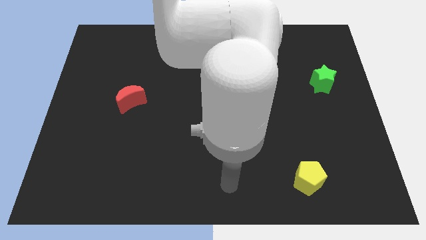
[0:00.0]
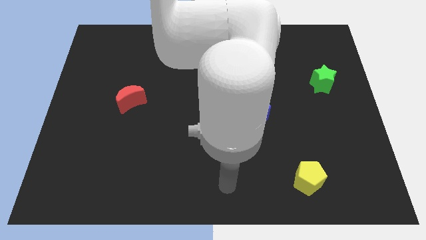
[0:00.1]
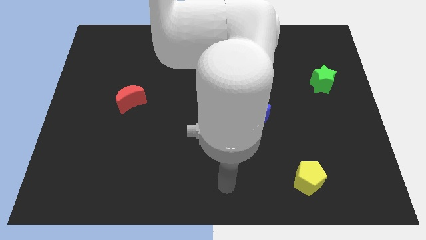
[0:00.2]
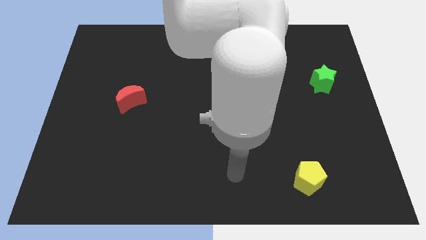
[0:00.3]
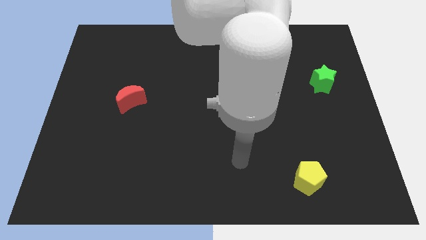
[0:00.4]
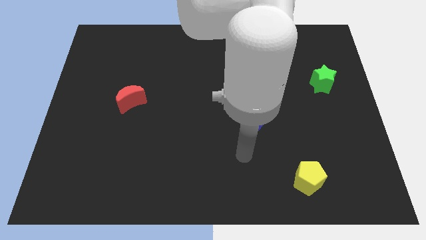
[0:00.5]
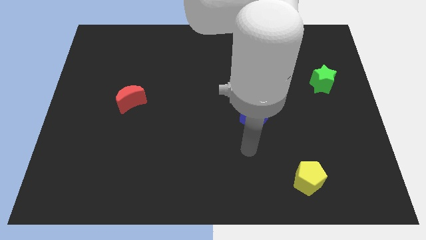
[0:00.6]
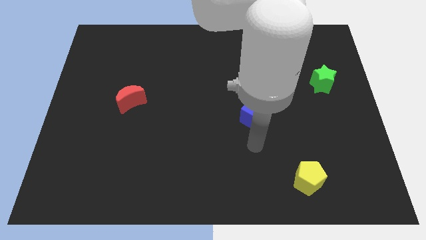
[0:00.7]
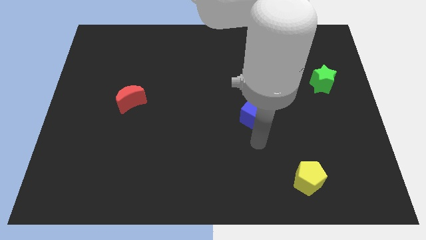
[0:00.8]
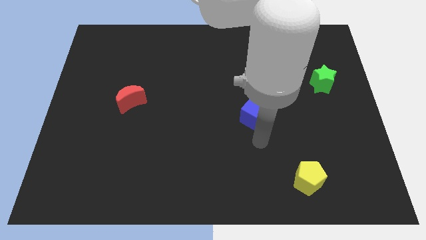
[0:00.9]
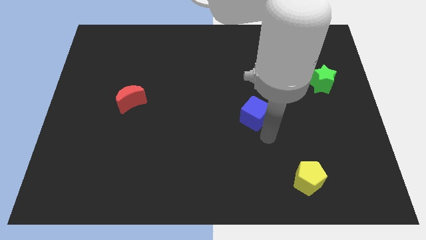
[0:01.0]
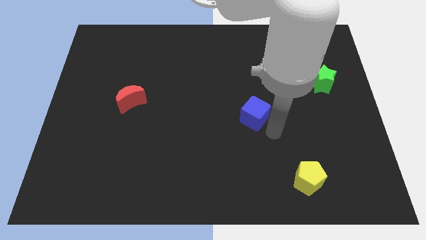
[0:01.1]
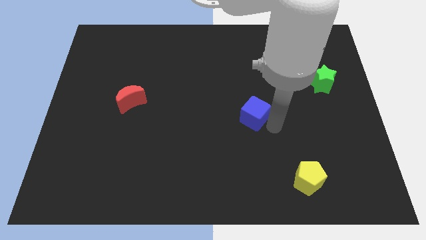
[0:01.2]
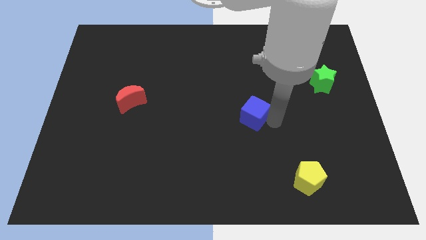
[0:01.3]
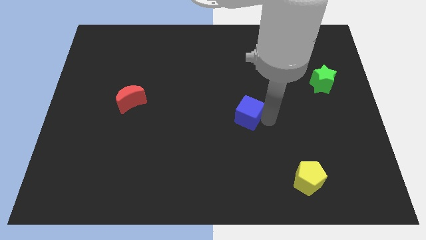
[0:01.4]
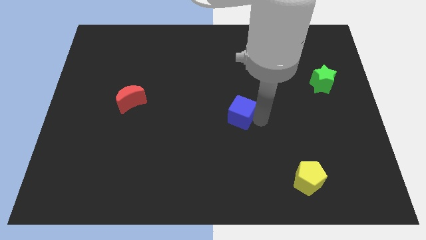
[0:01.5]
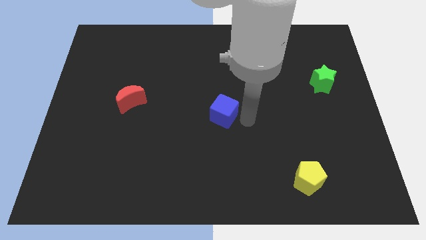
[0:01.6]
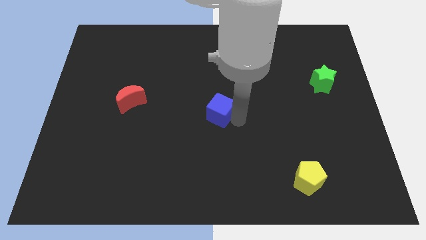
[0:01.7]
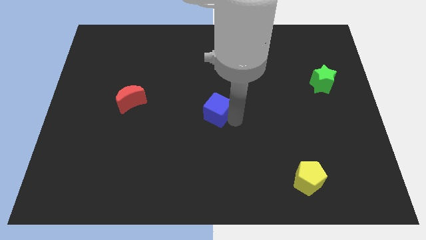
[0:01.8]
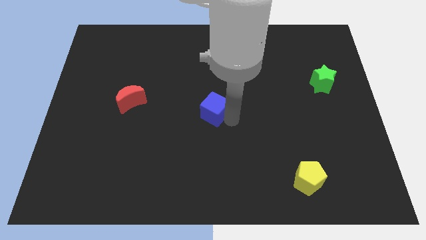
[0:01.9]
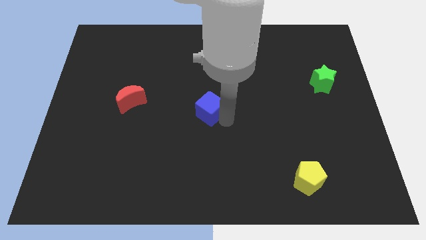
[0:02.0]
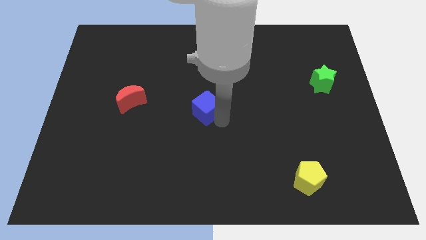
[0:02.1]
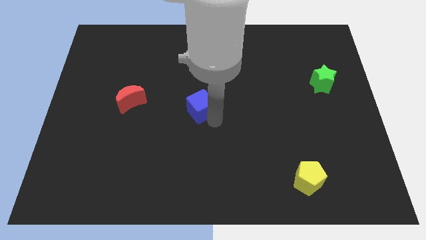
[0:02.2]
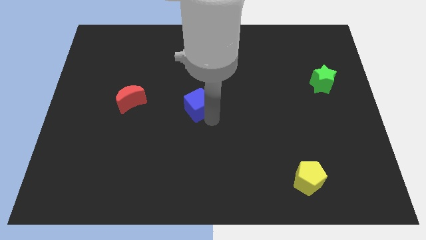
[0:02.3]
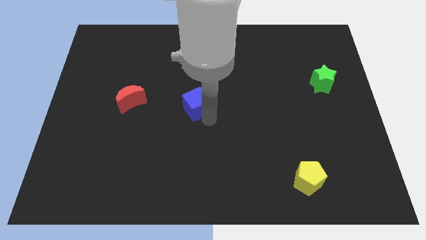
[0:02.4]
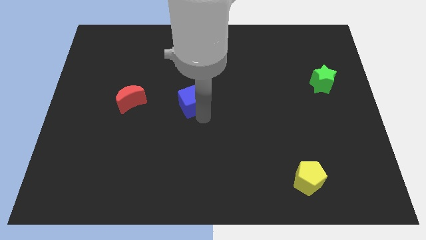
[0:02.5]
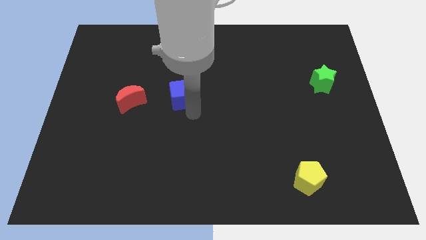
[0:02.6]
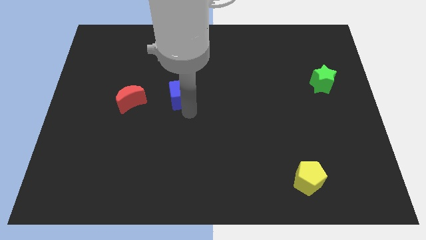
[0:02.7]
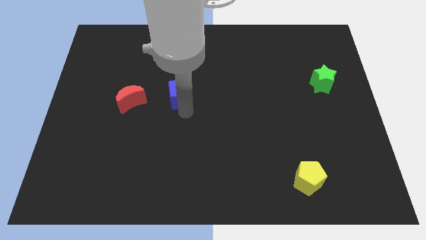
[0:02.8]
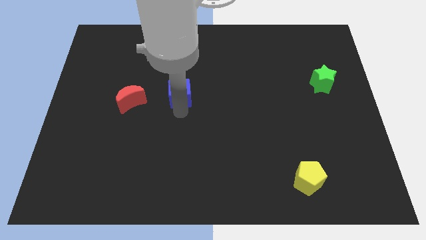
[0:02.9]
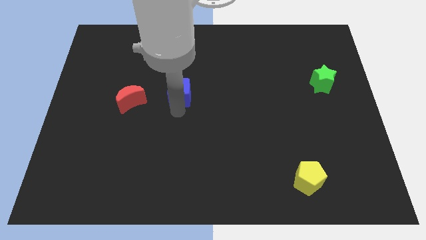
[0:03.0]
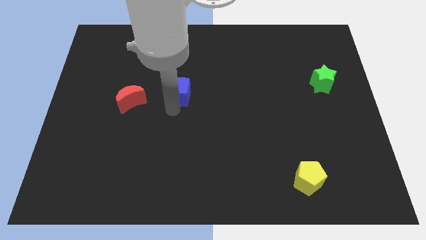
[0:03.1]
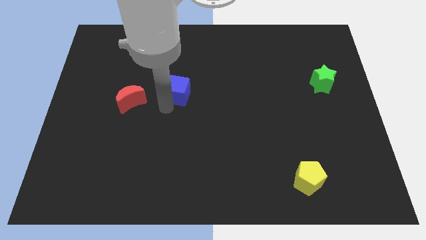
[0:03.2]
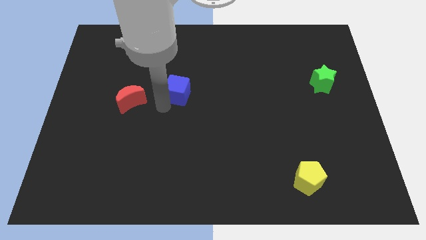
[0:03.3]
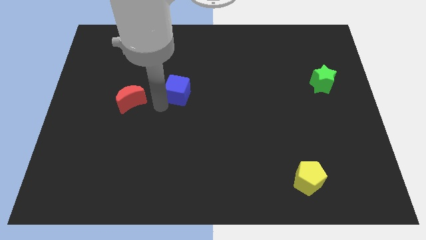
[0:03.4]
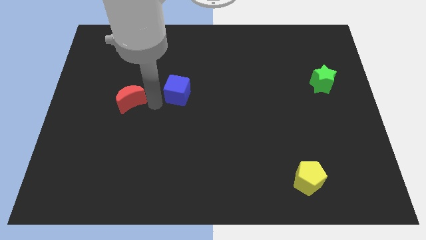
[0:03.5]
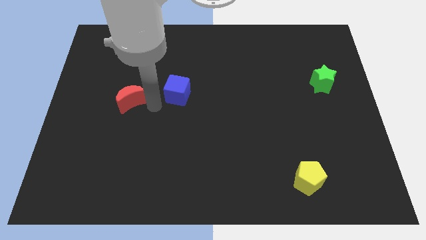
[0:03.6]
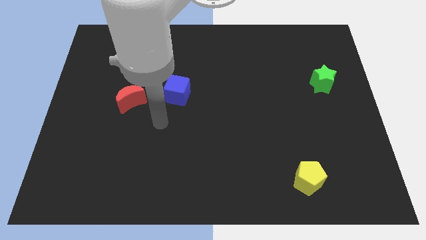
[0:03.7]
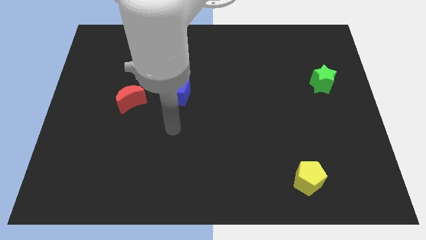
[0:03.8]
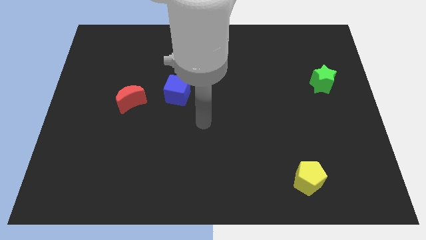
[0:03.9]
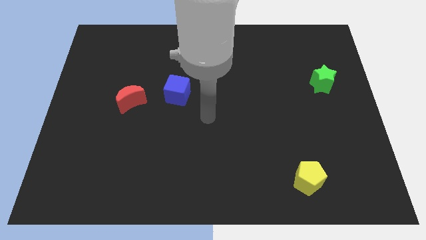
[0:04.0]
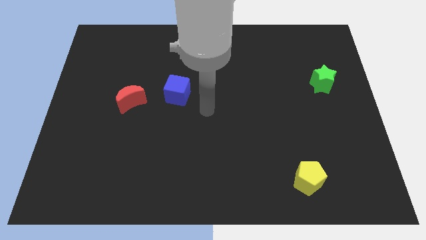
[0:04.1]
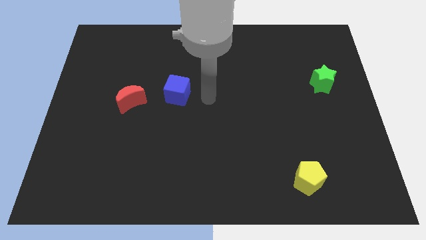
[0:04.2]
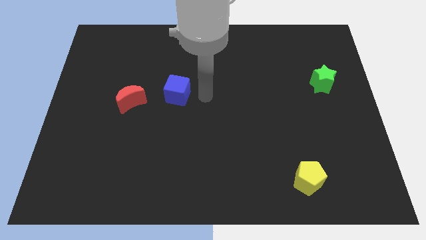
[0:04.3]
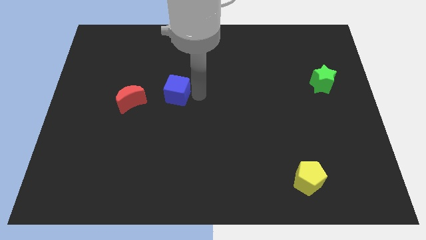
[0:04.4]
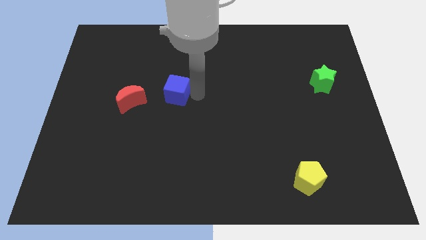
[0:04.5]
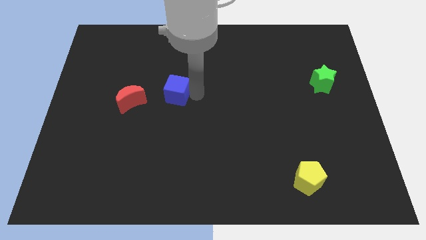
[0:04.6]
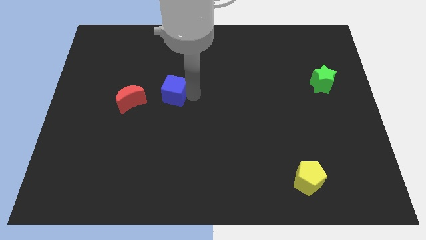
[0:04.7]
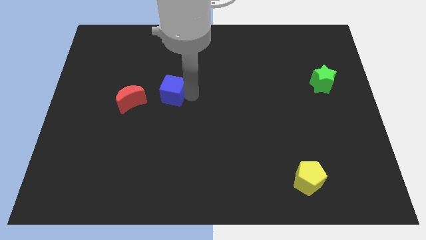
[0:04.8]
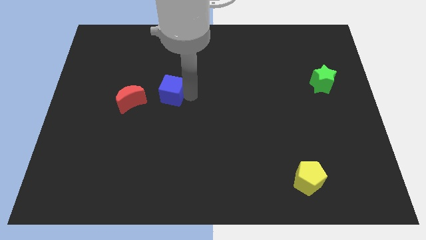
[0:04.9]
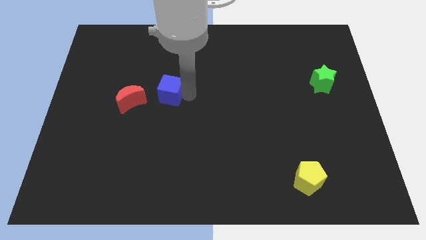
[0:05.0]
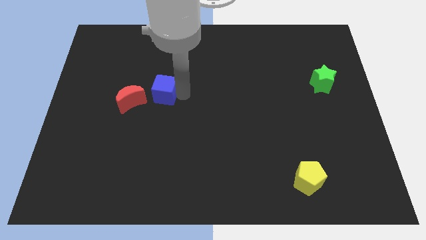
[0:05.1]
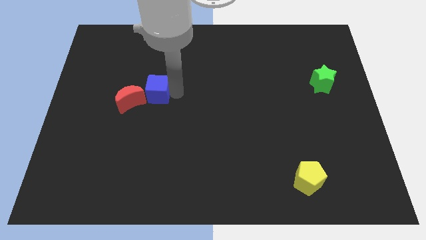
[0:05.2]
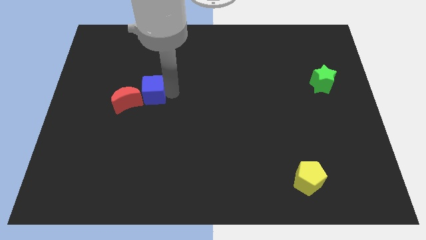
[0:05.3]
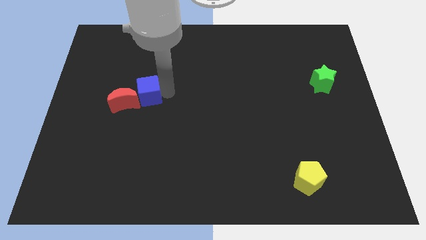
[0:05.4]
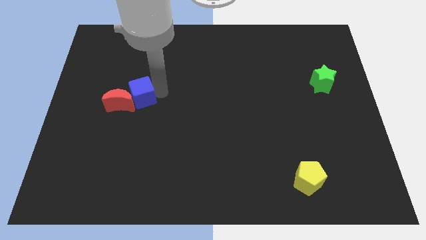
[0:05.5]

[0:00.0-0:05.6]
push the blue cube close to the red moon

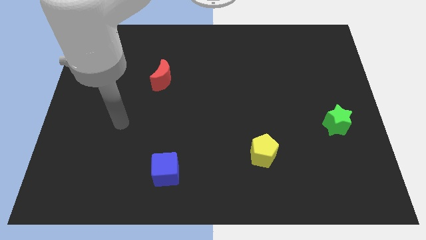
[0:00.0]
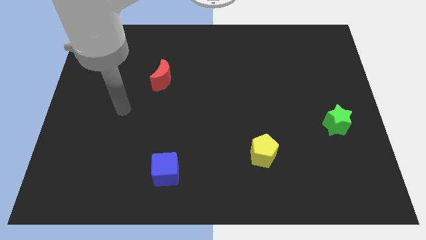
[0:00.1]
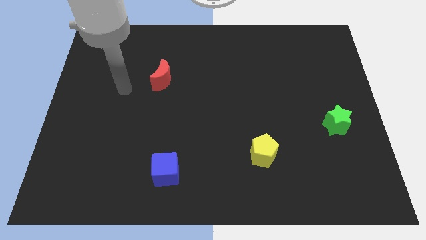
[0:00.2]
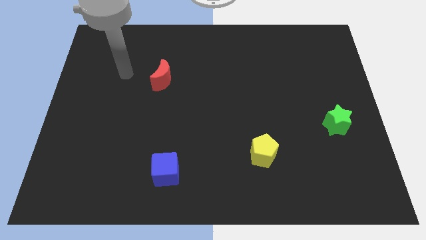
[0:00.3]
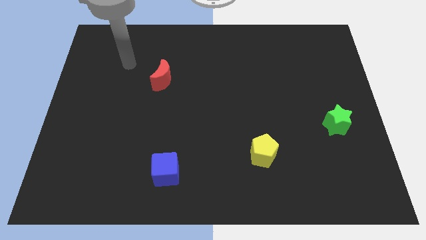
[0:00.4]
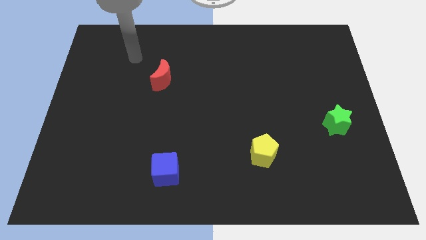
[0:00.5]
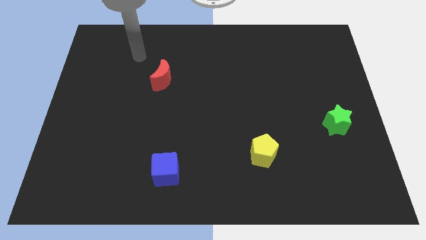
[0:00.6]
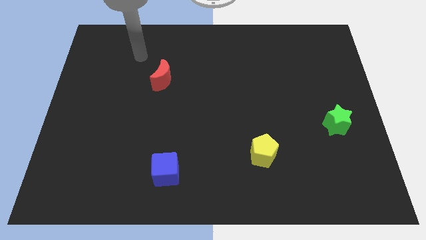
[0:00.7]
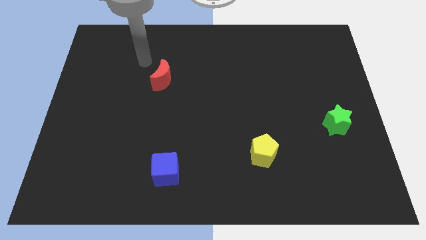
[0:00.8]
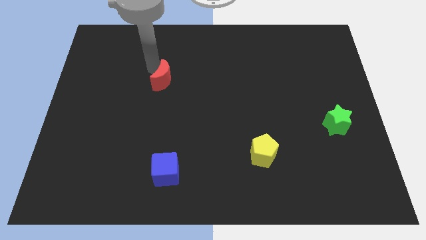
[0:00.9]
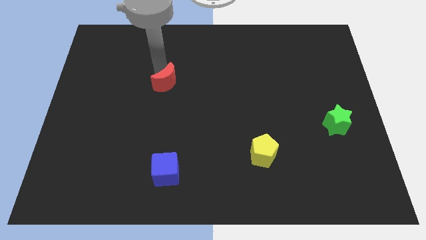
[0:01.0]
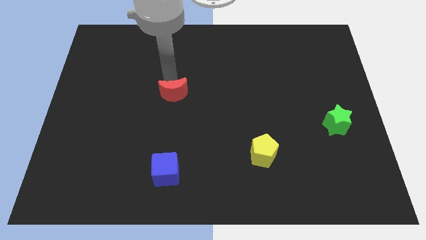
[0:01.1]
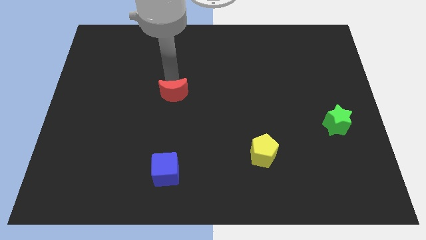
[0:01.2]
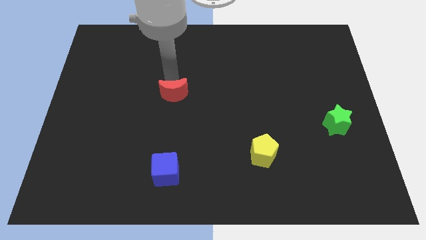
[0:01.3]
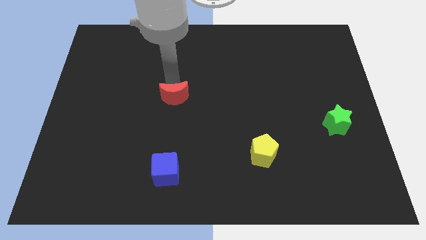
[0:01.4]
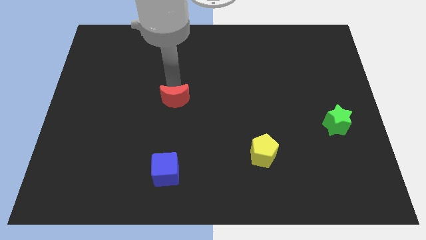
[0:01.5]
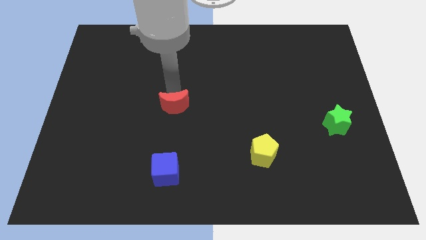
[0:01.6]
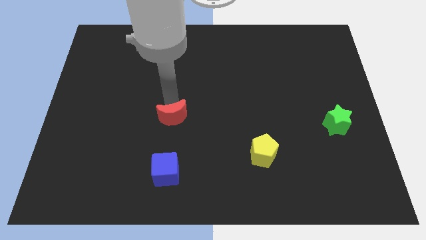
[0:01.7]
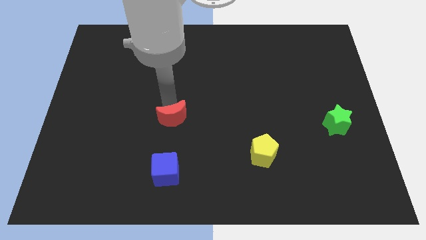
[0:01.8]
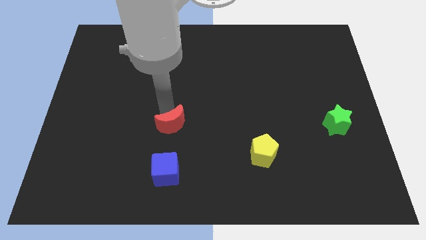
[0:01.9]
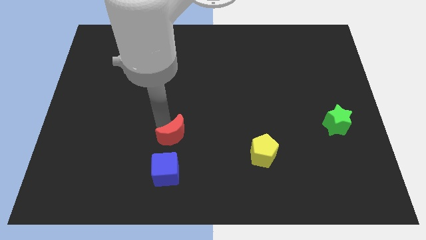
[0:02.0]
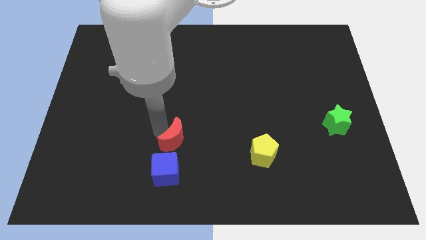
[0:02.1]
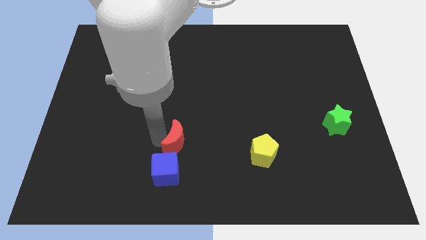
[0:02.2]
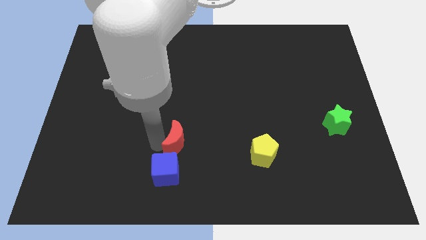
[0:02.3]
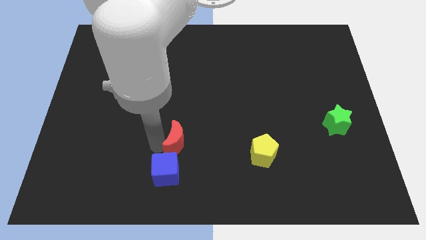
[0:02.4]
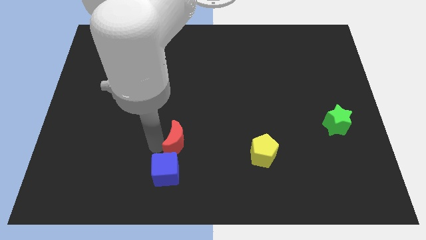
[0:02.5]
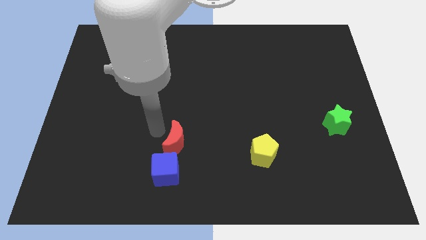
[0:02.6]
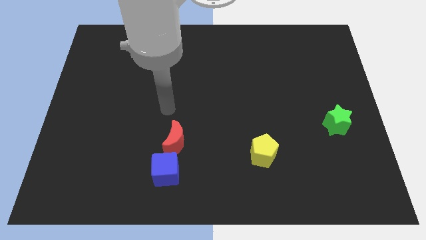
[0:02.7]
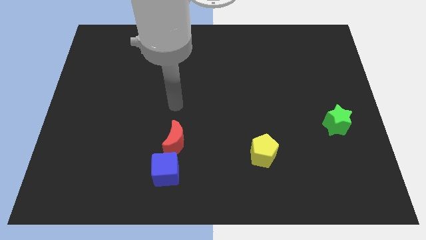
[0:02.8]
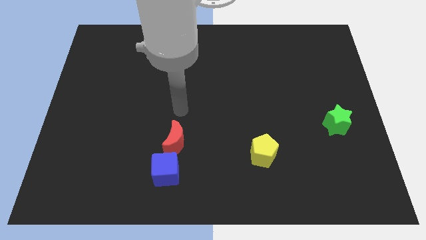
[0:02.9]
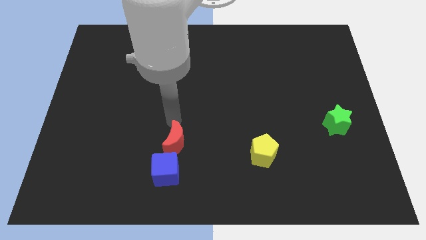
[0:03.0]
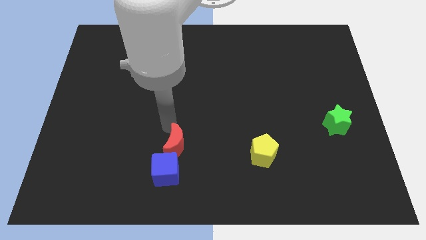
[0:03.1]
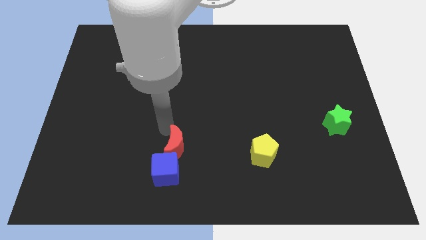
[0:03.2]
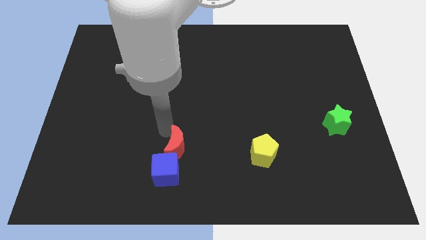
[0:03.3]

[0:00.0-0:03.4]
put the red block towards the blue block
